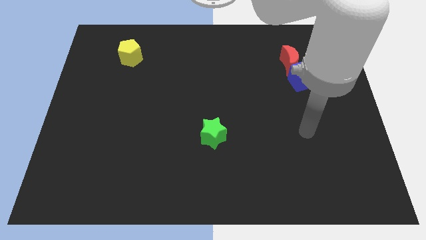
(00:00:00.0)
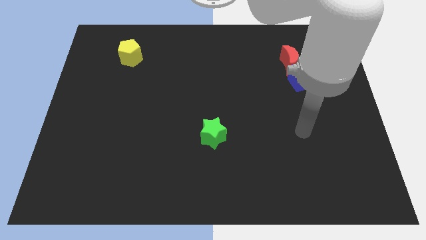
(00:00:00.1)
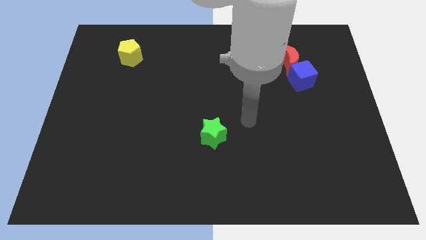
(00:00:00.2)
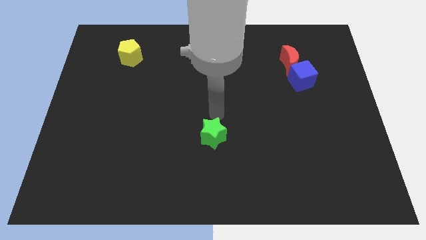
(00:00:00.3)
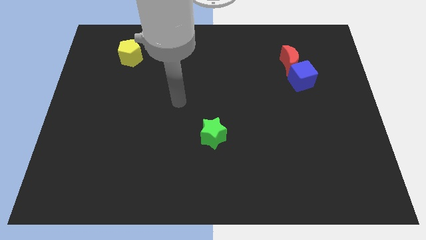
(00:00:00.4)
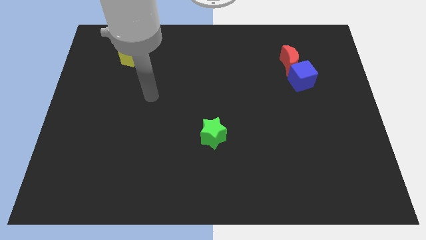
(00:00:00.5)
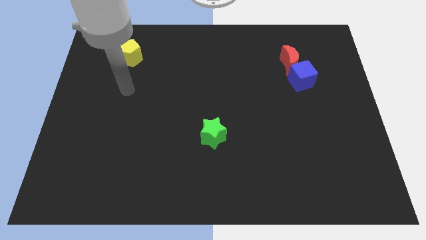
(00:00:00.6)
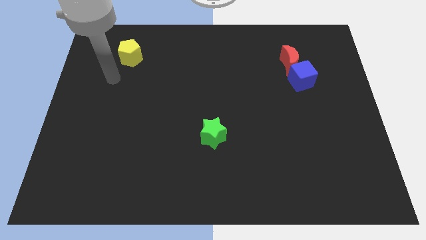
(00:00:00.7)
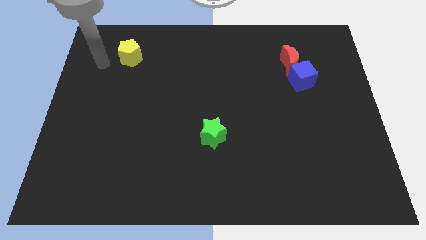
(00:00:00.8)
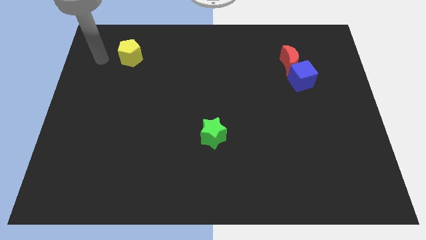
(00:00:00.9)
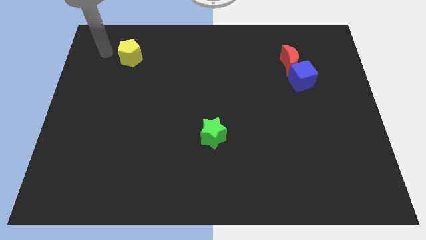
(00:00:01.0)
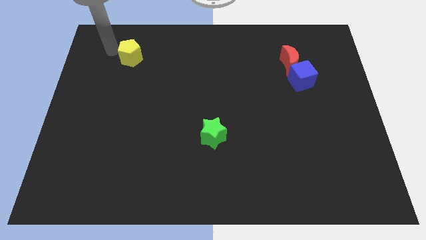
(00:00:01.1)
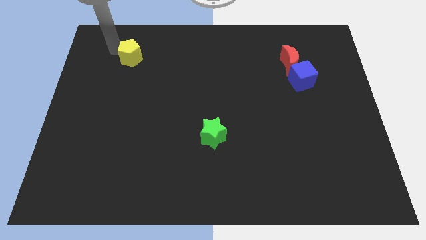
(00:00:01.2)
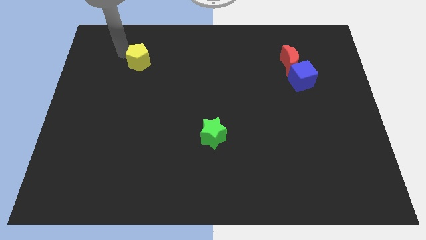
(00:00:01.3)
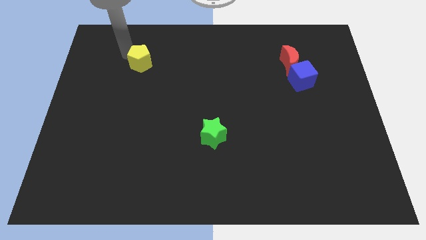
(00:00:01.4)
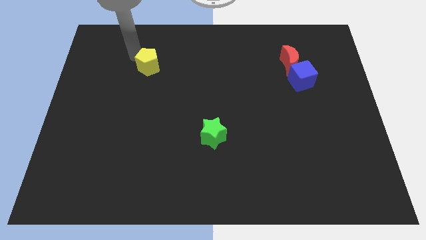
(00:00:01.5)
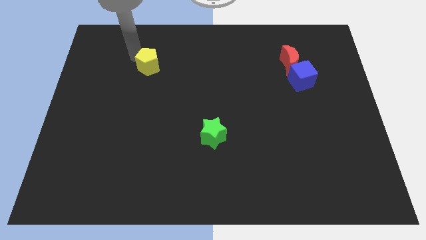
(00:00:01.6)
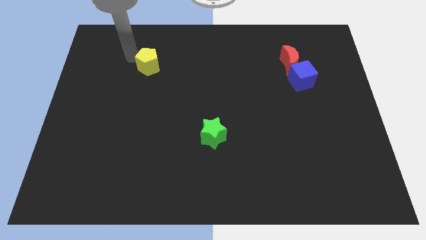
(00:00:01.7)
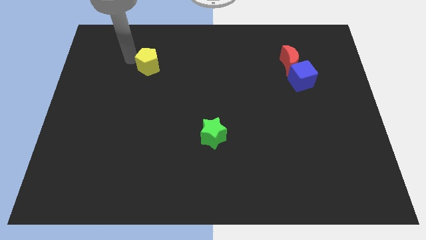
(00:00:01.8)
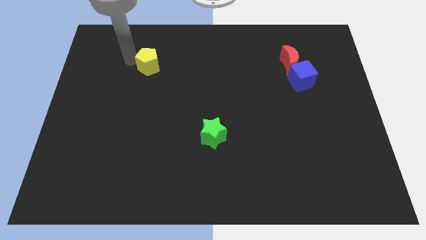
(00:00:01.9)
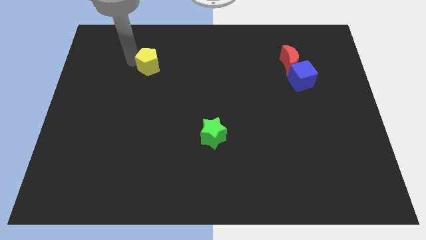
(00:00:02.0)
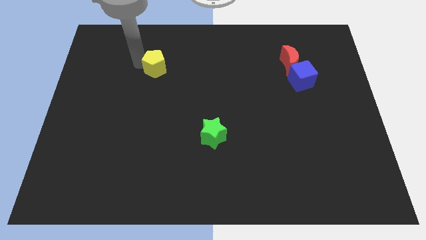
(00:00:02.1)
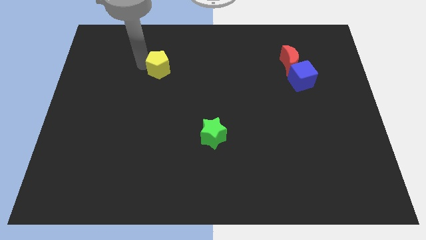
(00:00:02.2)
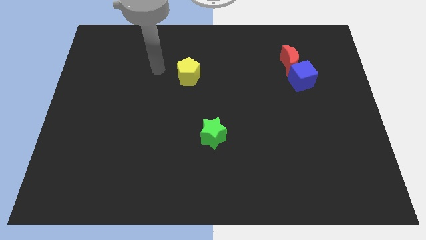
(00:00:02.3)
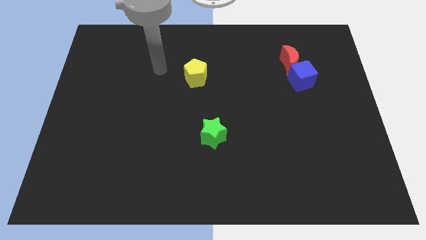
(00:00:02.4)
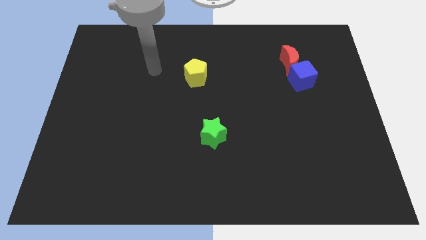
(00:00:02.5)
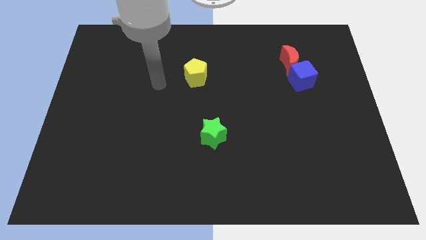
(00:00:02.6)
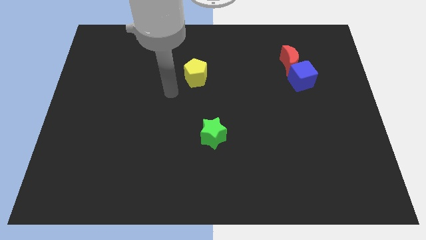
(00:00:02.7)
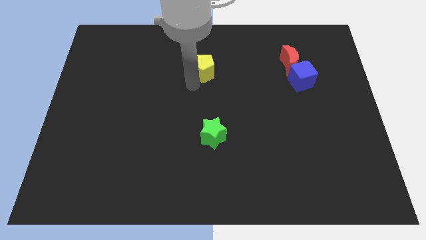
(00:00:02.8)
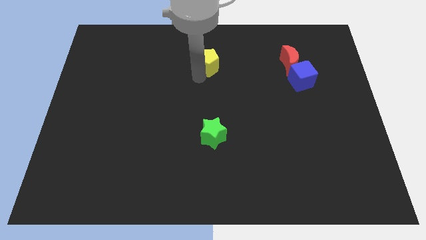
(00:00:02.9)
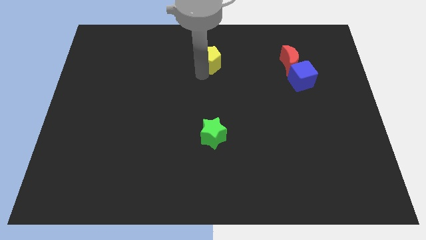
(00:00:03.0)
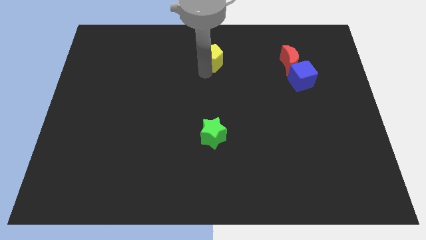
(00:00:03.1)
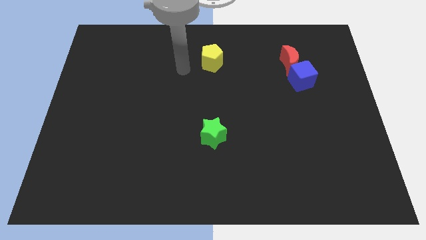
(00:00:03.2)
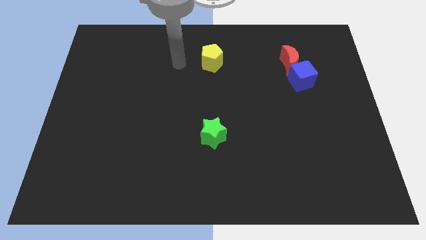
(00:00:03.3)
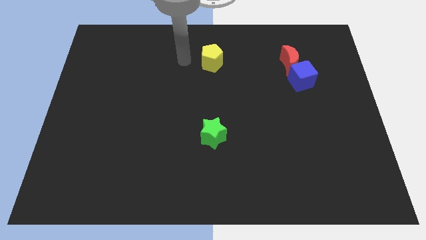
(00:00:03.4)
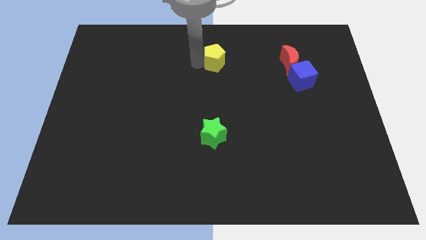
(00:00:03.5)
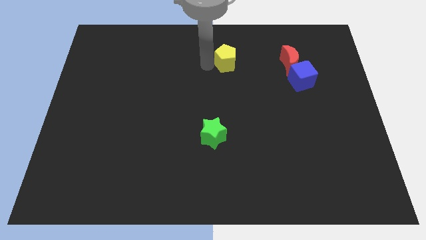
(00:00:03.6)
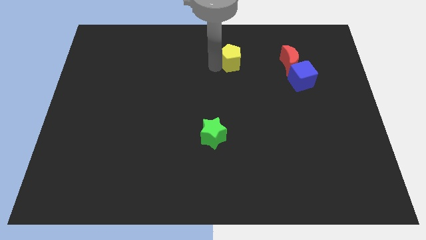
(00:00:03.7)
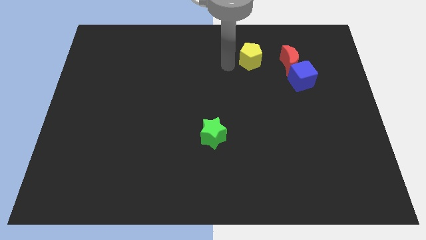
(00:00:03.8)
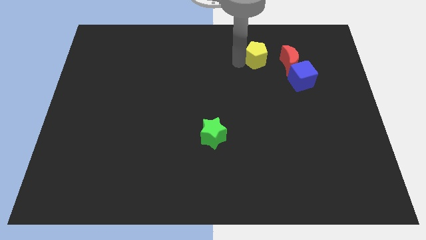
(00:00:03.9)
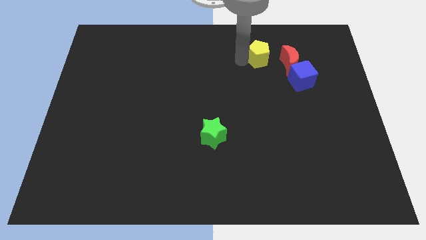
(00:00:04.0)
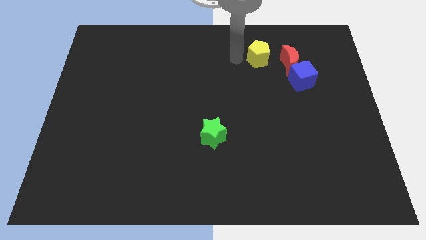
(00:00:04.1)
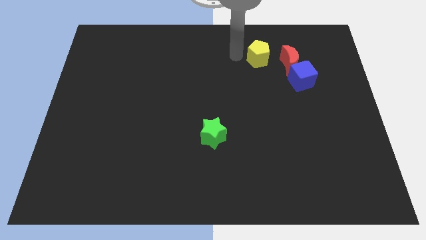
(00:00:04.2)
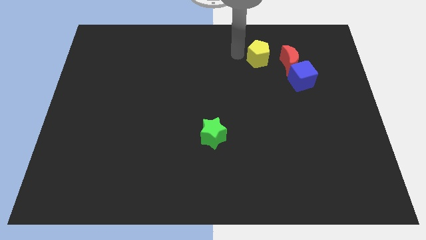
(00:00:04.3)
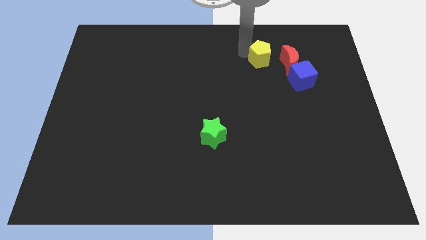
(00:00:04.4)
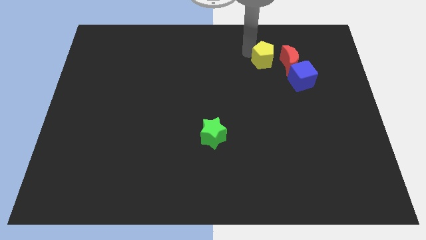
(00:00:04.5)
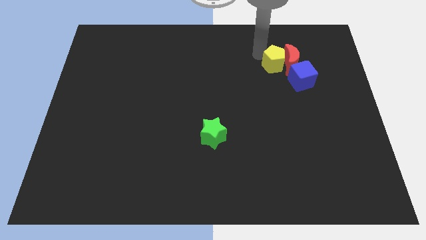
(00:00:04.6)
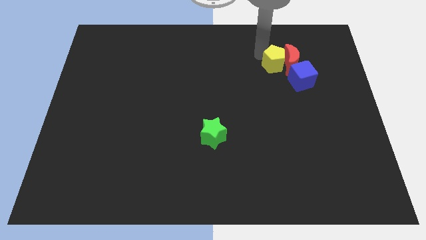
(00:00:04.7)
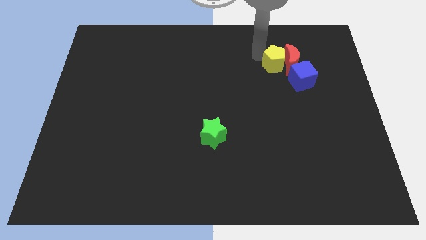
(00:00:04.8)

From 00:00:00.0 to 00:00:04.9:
put the yellow pentagon to the red moon

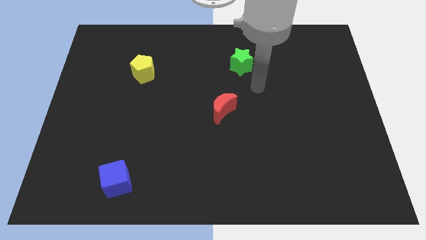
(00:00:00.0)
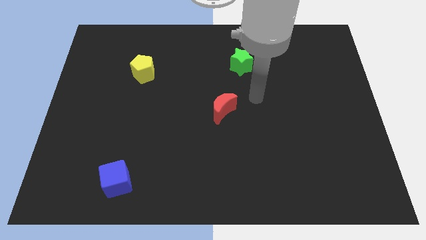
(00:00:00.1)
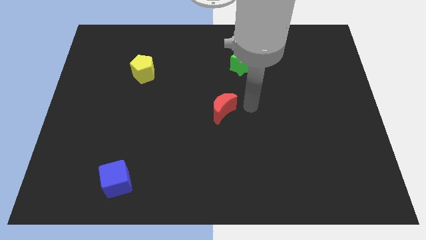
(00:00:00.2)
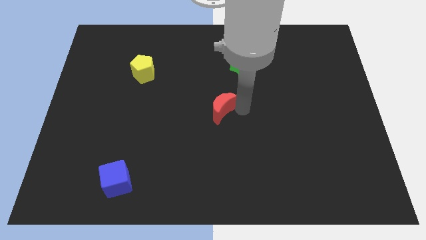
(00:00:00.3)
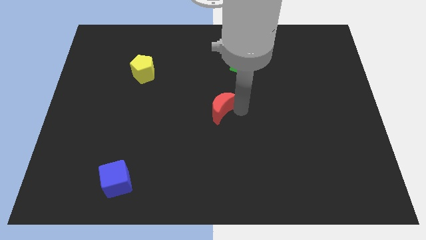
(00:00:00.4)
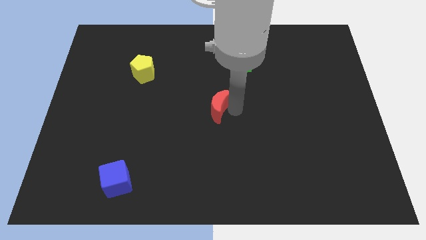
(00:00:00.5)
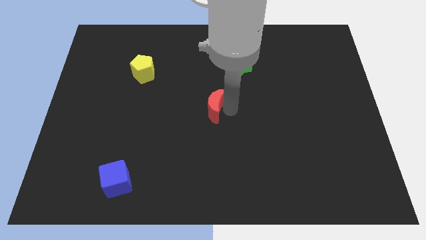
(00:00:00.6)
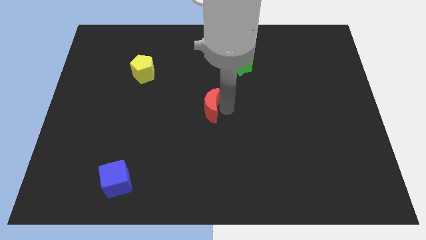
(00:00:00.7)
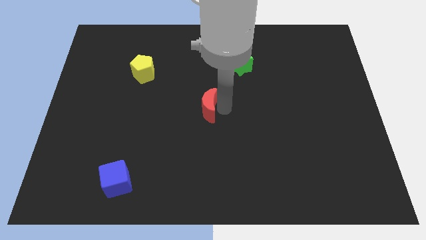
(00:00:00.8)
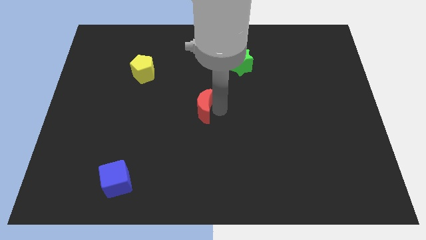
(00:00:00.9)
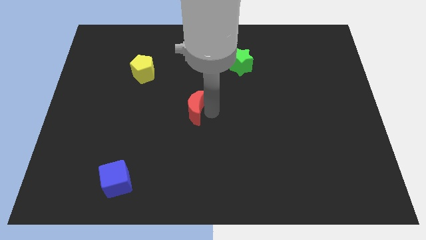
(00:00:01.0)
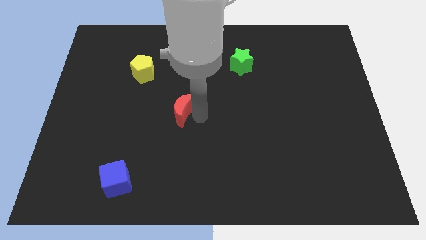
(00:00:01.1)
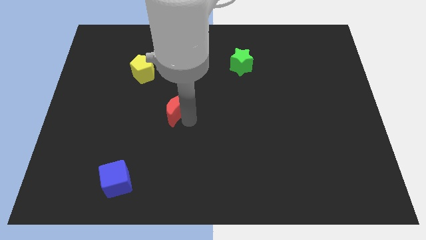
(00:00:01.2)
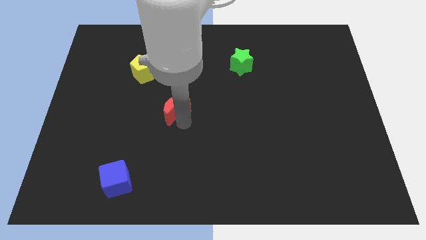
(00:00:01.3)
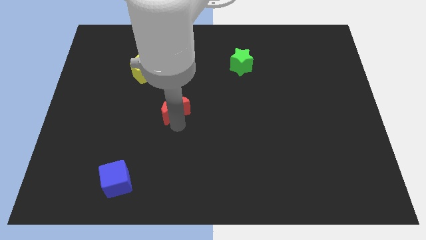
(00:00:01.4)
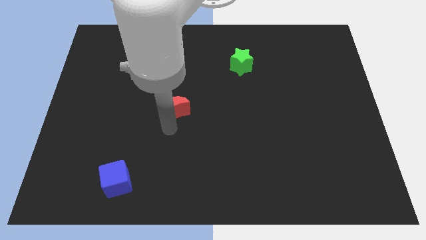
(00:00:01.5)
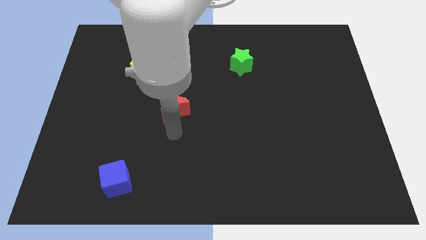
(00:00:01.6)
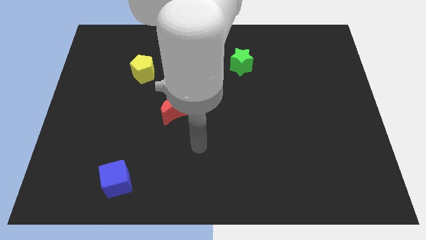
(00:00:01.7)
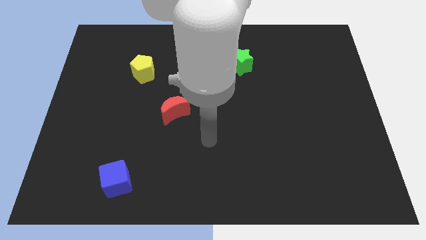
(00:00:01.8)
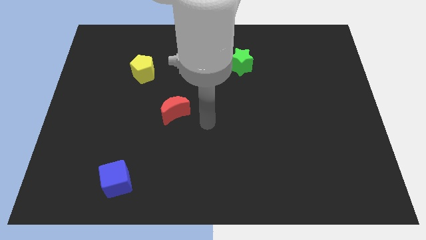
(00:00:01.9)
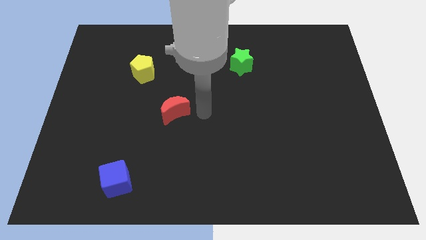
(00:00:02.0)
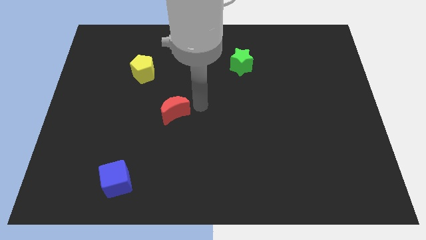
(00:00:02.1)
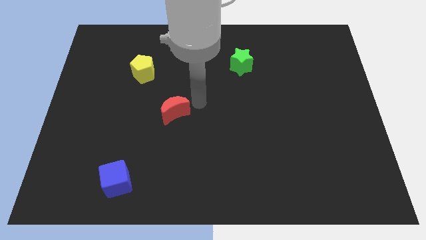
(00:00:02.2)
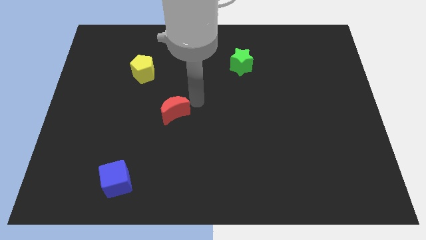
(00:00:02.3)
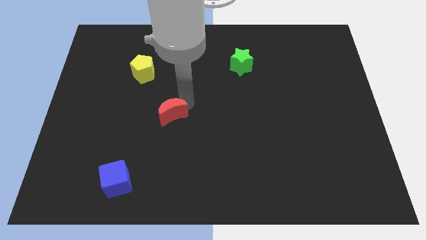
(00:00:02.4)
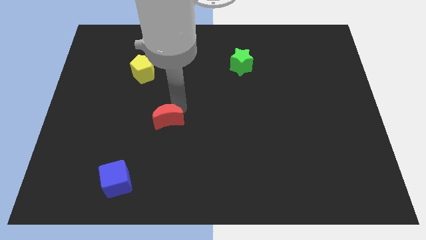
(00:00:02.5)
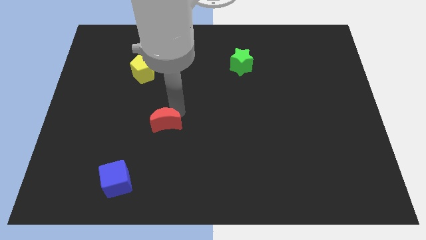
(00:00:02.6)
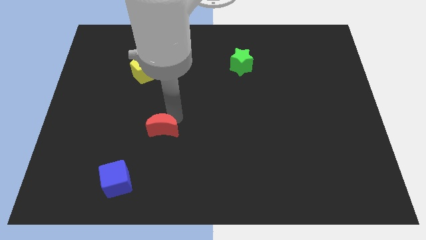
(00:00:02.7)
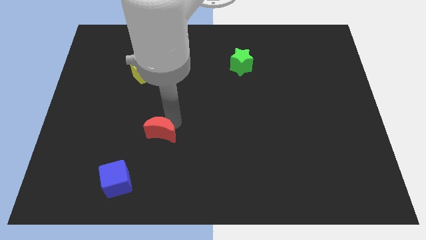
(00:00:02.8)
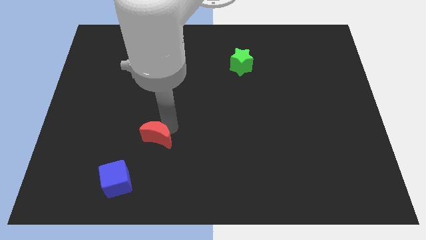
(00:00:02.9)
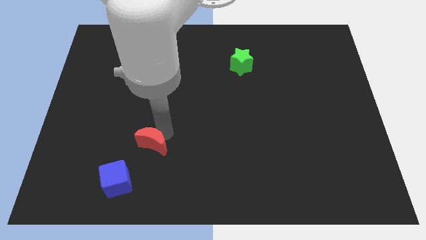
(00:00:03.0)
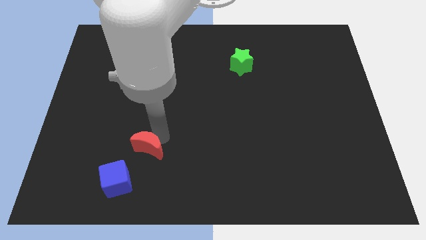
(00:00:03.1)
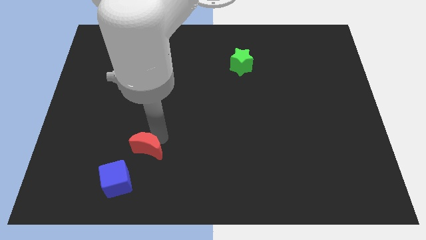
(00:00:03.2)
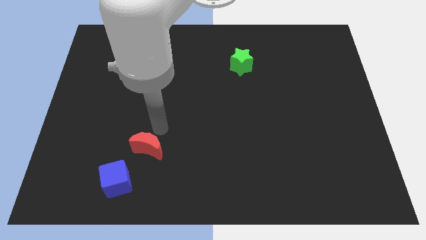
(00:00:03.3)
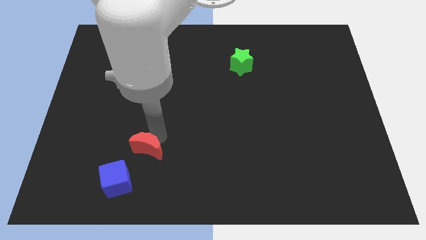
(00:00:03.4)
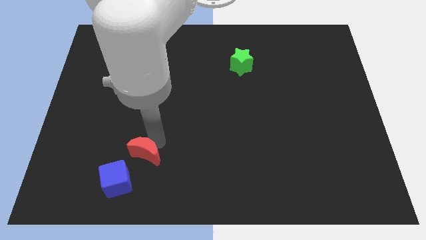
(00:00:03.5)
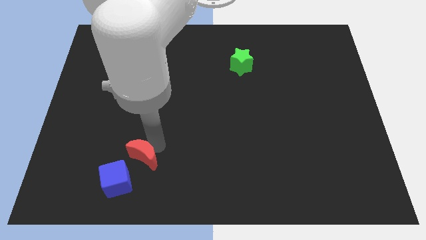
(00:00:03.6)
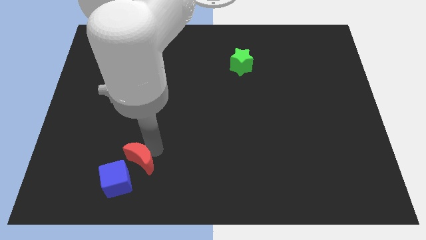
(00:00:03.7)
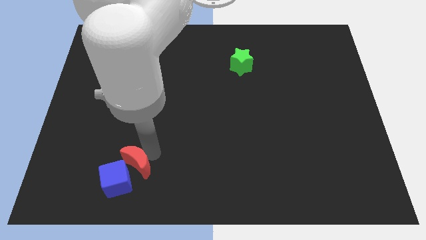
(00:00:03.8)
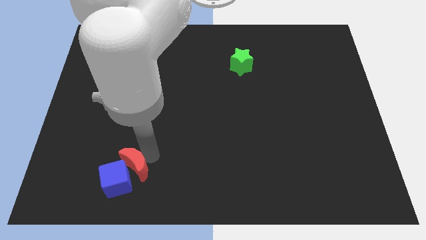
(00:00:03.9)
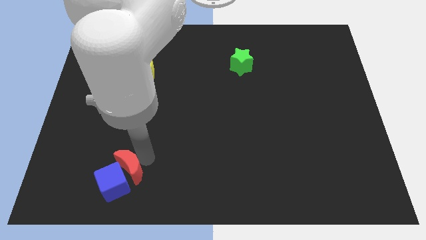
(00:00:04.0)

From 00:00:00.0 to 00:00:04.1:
slide the red moon close to the blue cube
